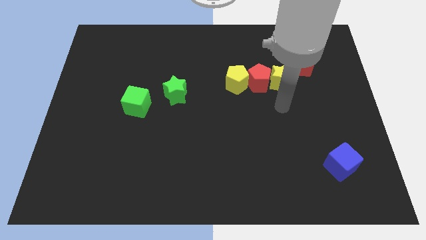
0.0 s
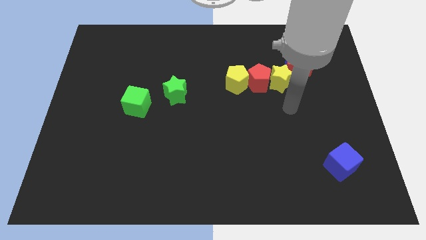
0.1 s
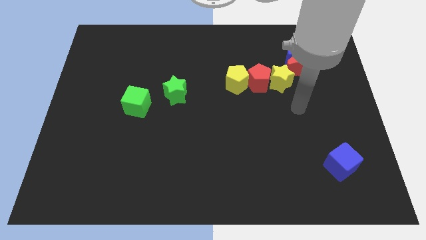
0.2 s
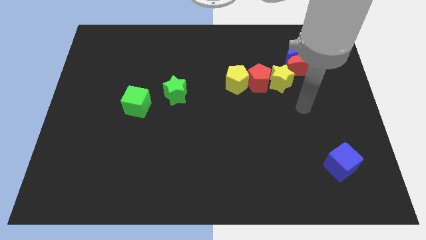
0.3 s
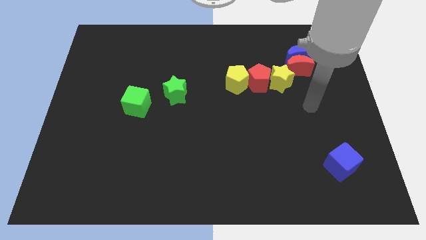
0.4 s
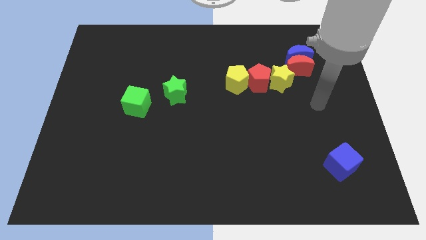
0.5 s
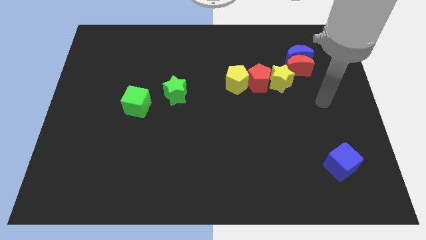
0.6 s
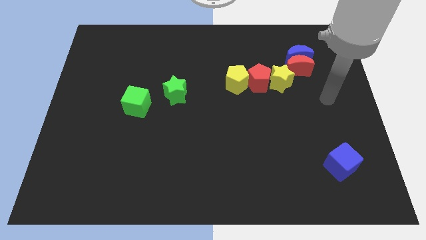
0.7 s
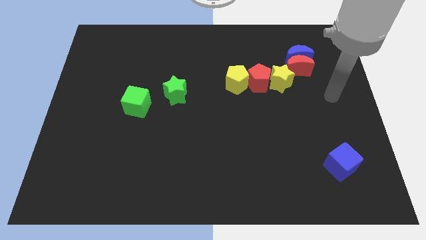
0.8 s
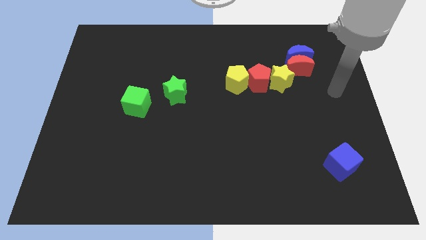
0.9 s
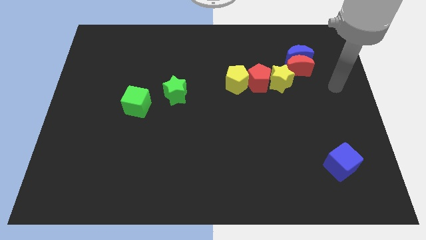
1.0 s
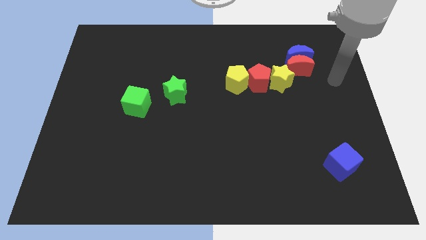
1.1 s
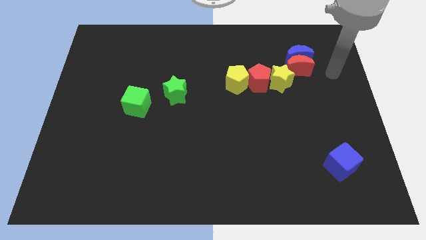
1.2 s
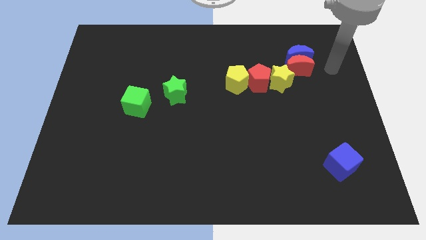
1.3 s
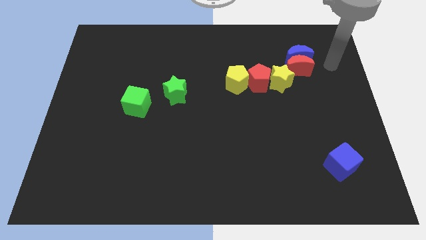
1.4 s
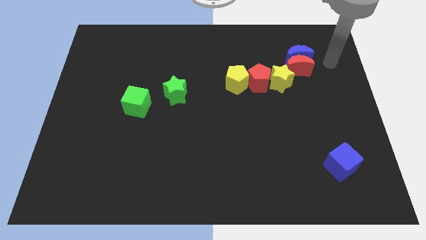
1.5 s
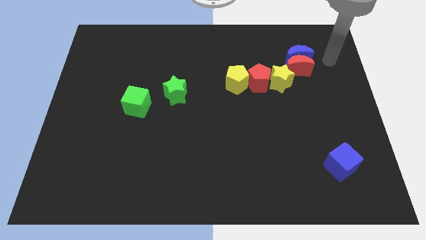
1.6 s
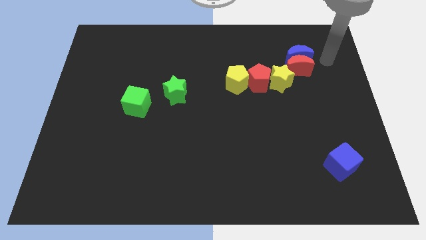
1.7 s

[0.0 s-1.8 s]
move robot arm towards blue crescent

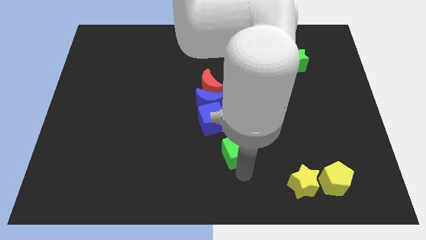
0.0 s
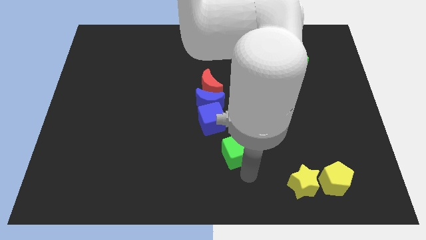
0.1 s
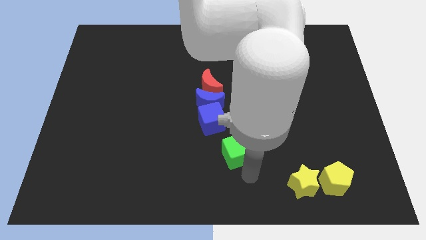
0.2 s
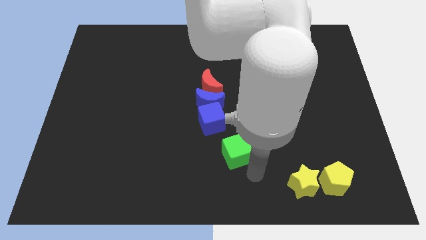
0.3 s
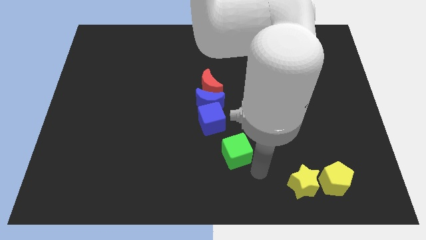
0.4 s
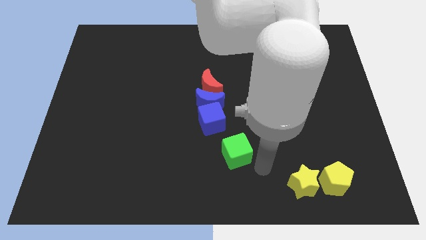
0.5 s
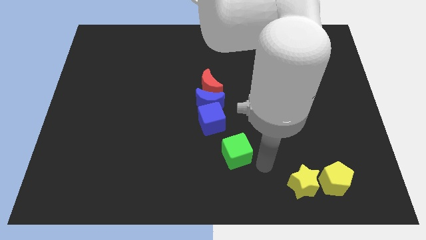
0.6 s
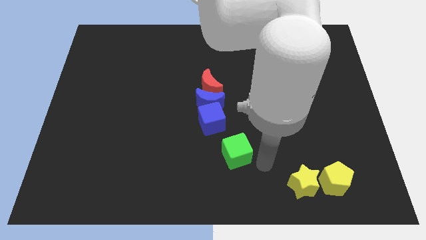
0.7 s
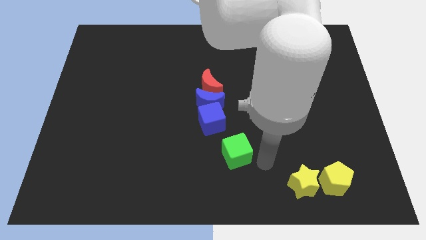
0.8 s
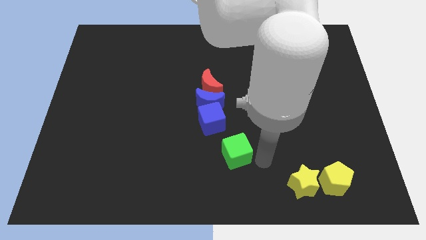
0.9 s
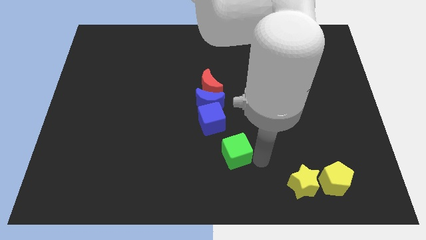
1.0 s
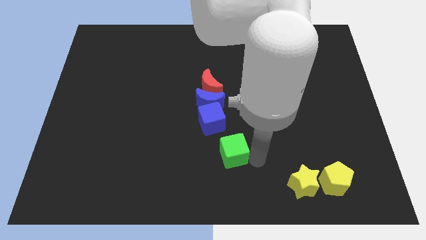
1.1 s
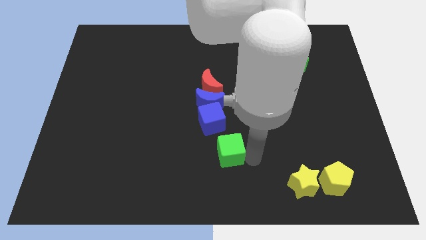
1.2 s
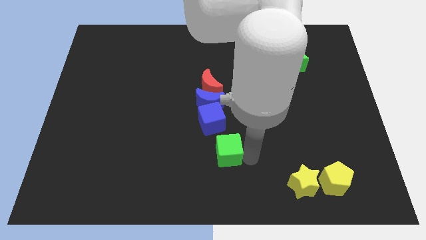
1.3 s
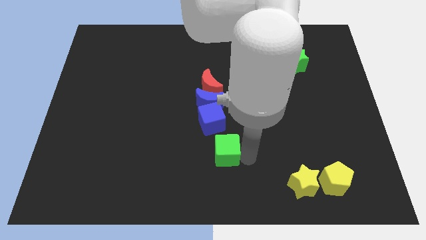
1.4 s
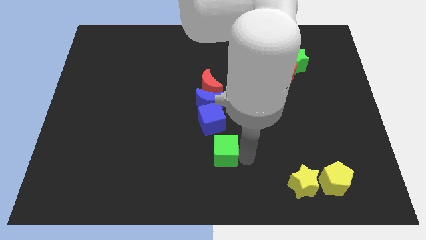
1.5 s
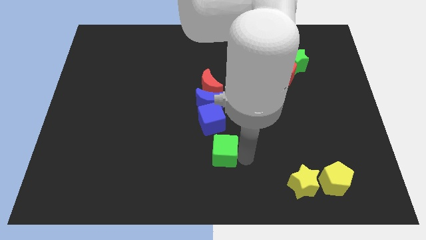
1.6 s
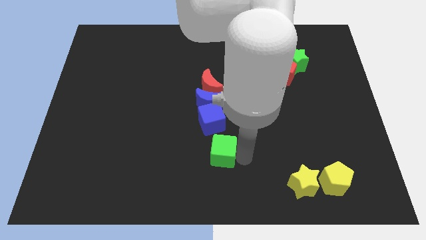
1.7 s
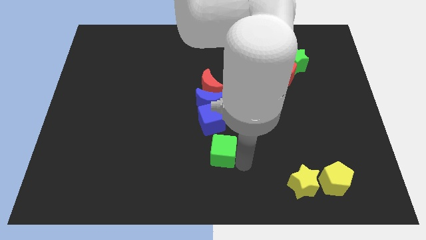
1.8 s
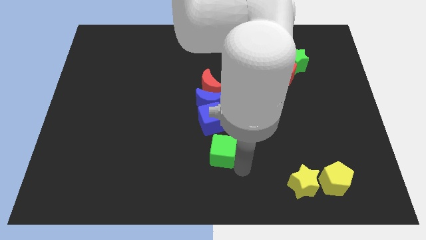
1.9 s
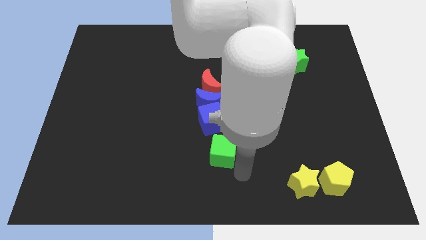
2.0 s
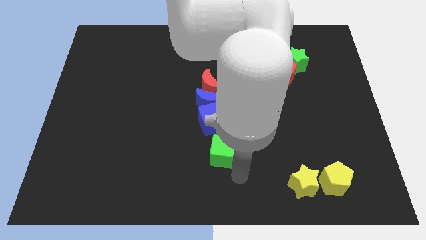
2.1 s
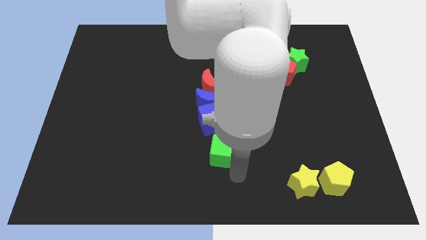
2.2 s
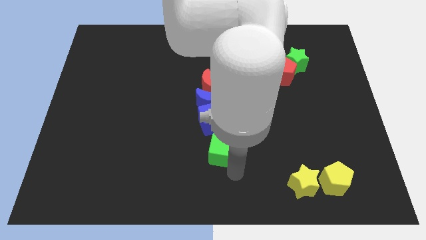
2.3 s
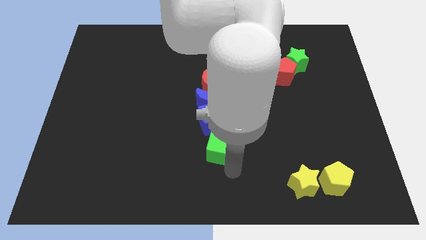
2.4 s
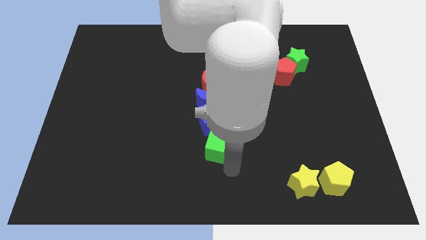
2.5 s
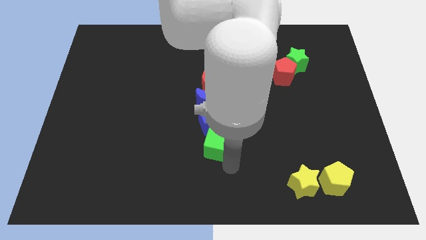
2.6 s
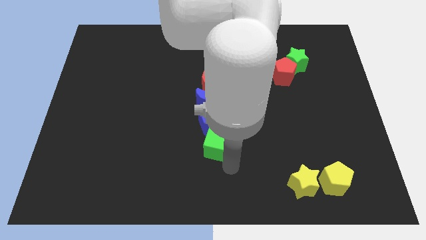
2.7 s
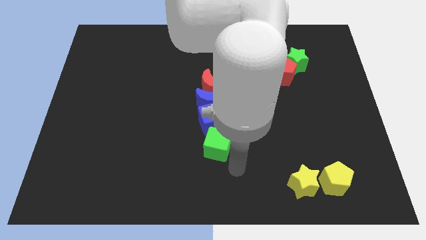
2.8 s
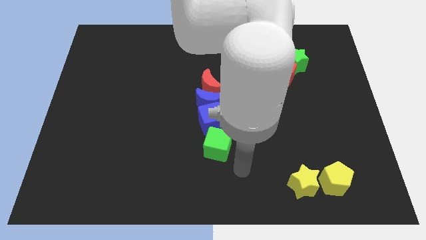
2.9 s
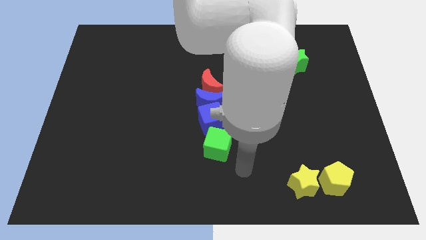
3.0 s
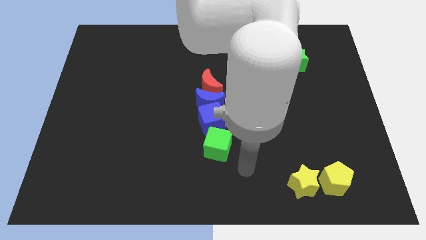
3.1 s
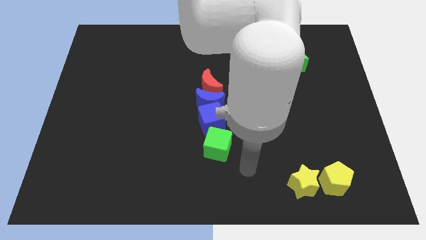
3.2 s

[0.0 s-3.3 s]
move the green cube close to the blue cube

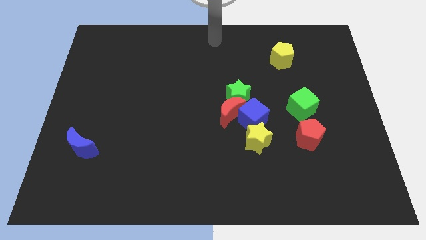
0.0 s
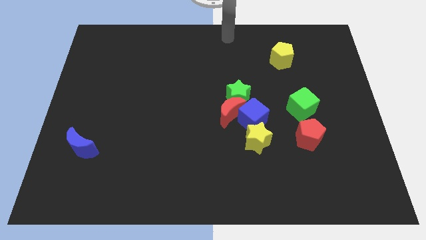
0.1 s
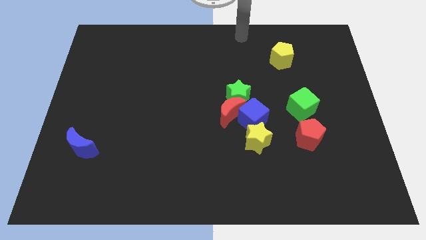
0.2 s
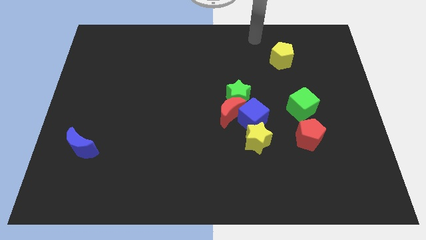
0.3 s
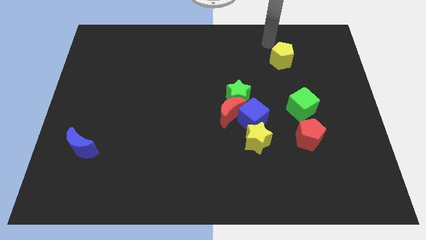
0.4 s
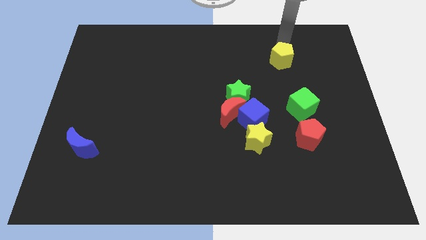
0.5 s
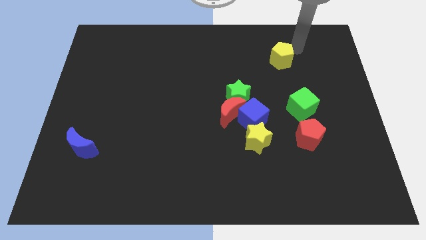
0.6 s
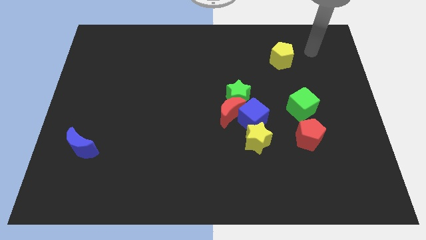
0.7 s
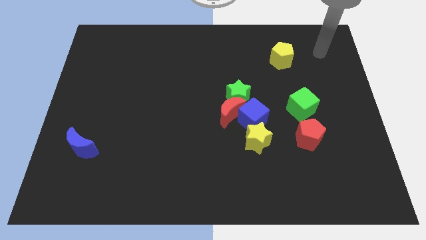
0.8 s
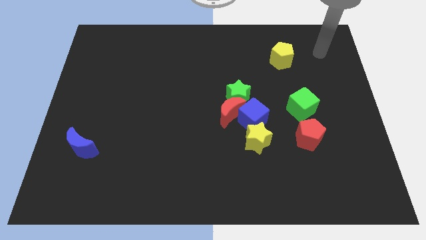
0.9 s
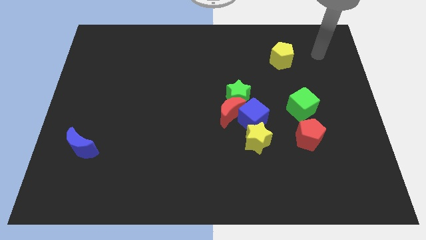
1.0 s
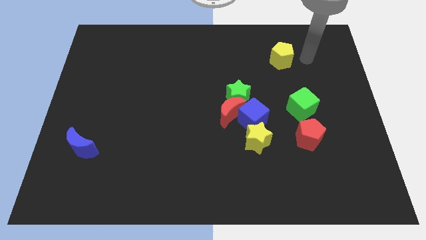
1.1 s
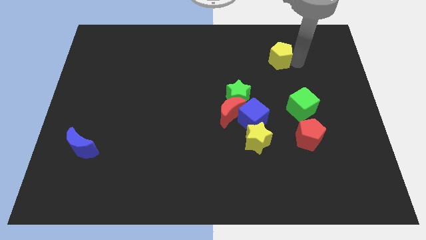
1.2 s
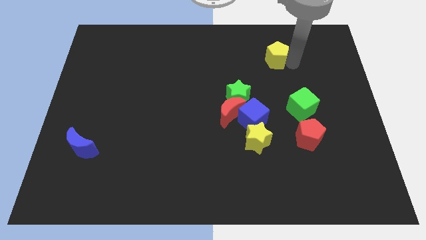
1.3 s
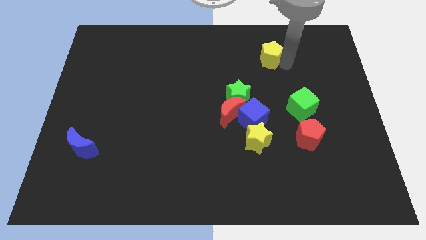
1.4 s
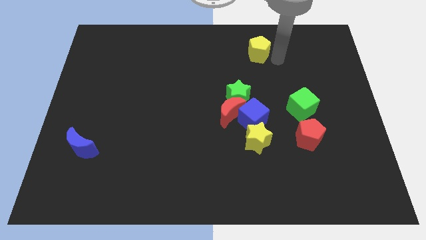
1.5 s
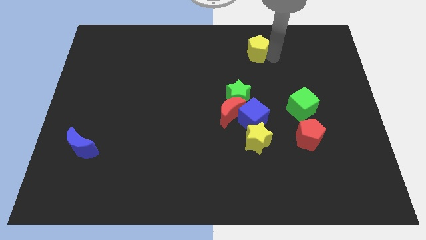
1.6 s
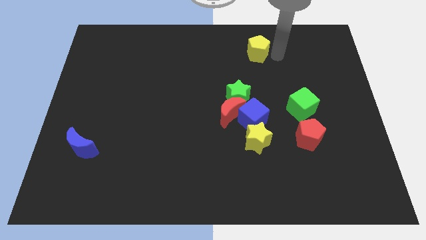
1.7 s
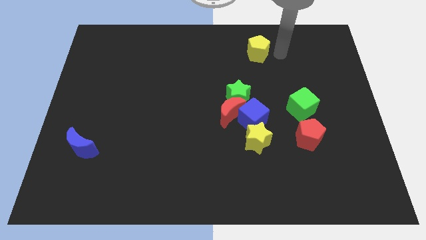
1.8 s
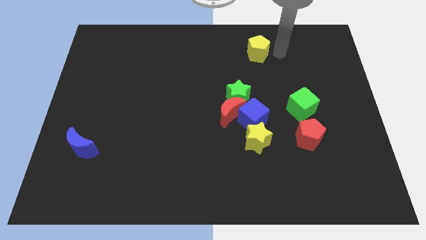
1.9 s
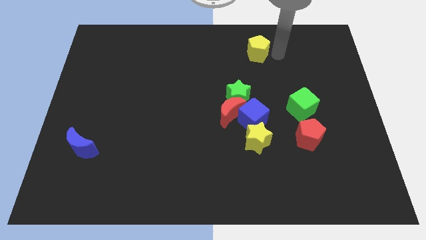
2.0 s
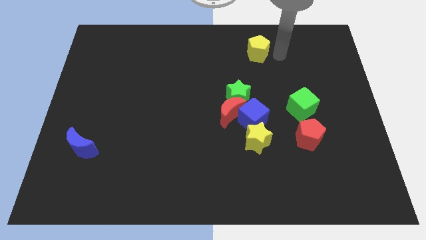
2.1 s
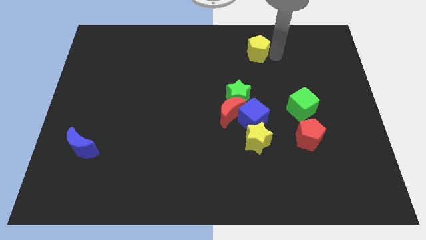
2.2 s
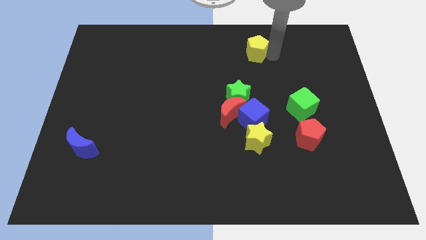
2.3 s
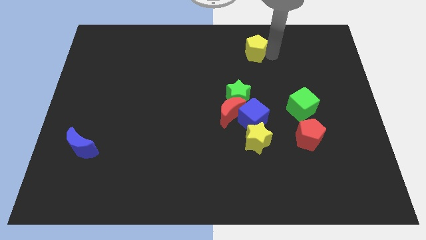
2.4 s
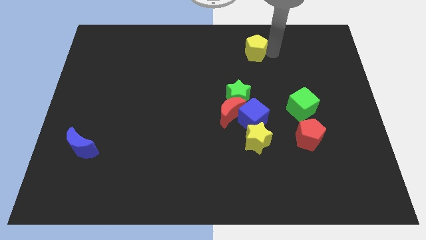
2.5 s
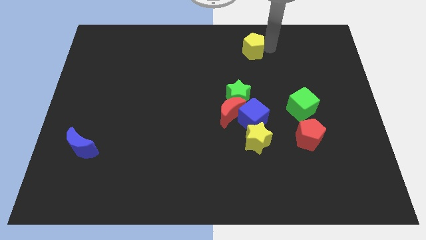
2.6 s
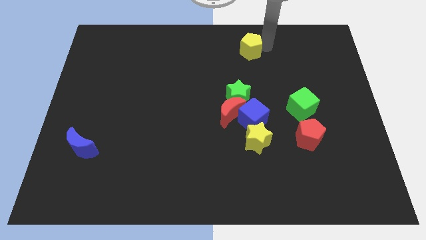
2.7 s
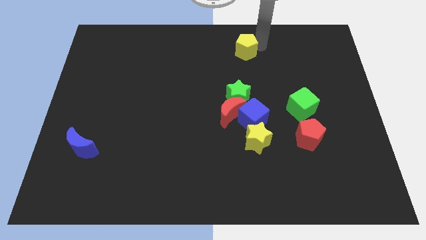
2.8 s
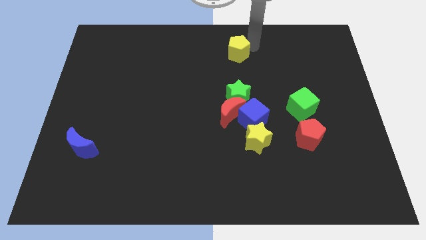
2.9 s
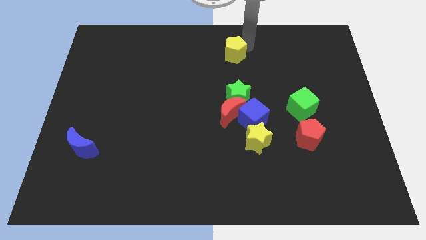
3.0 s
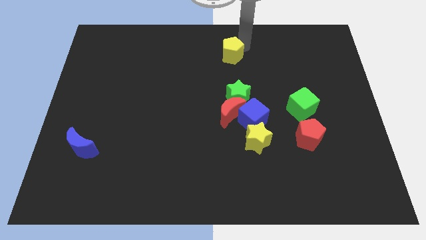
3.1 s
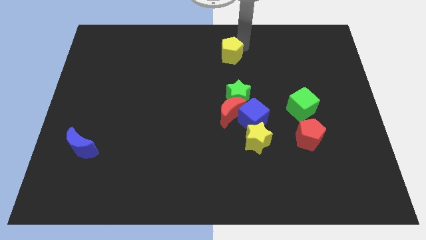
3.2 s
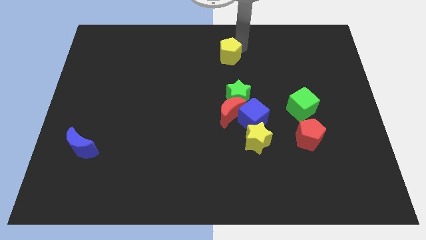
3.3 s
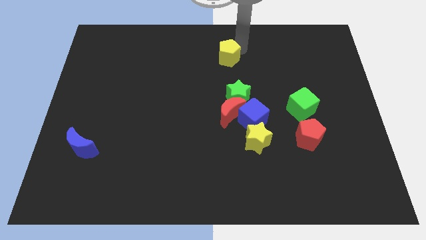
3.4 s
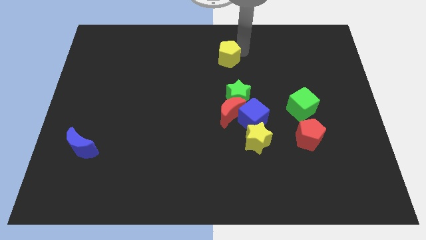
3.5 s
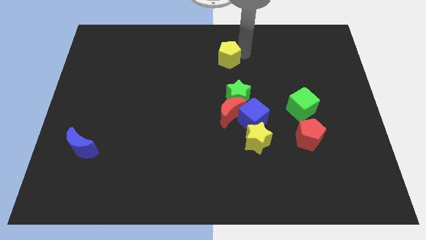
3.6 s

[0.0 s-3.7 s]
move the yellow pentagon slightly towards the green star
